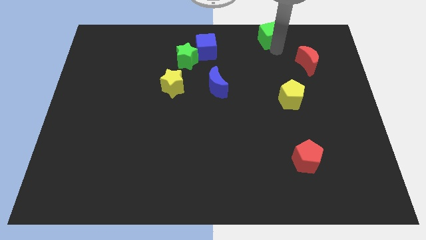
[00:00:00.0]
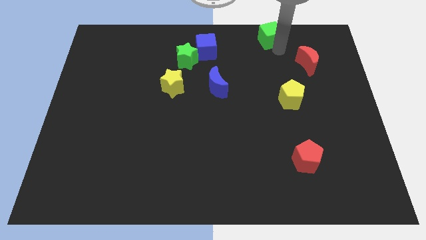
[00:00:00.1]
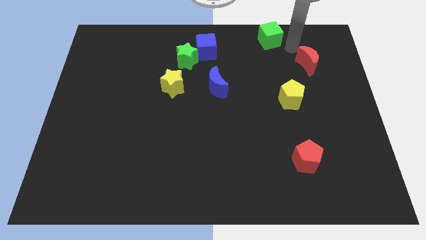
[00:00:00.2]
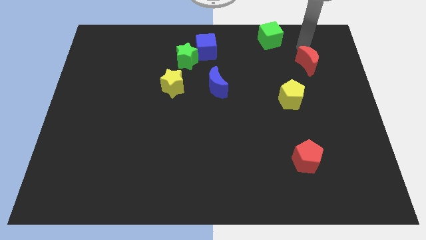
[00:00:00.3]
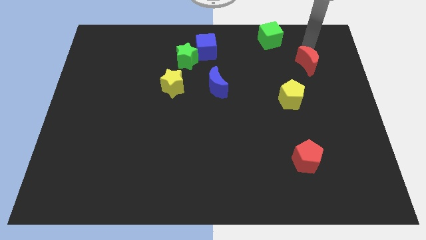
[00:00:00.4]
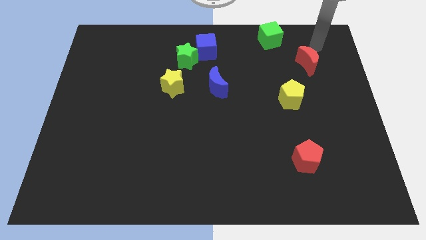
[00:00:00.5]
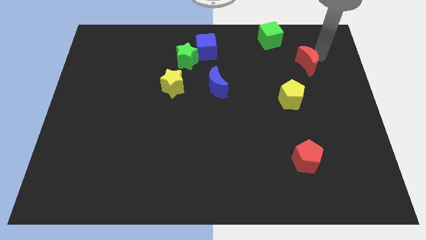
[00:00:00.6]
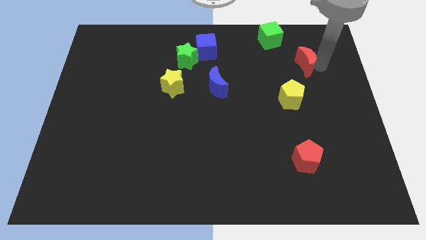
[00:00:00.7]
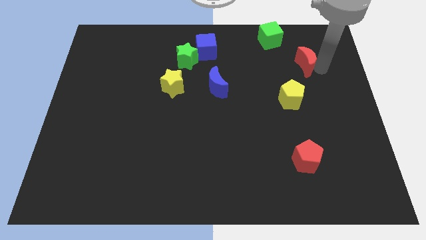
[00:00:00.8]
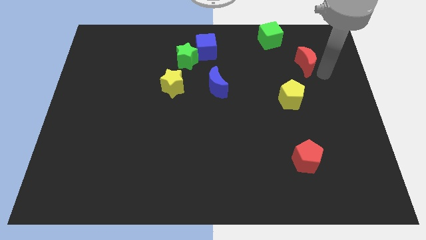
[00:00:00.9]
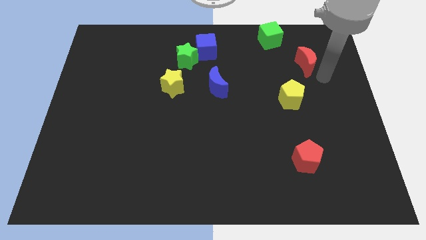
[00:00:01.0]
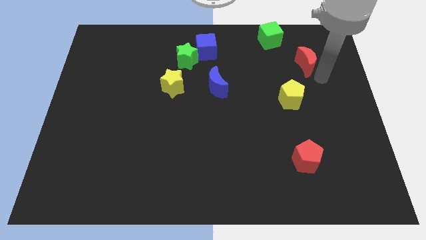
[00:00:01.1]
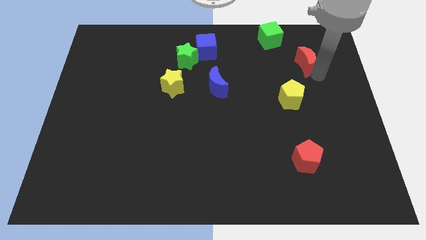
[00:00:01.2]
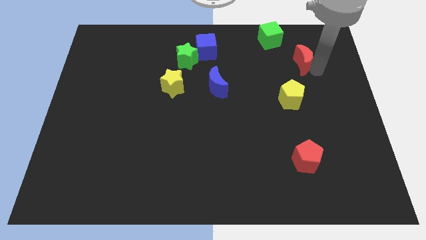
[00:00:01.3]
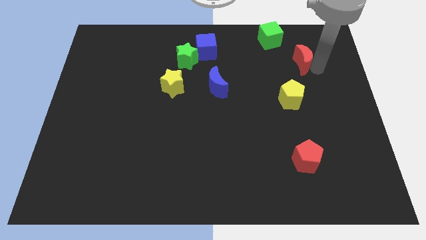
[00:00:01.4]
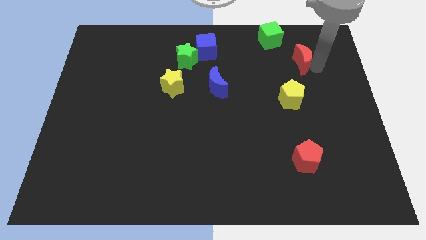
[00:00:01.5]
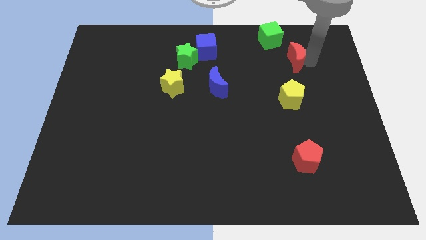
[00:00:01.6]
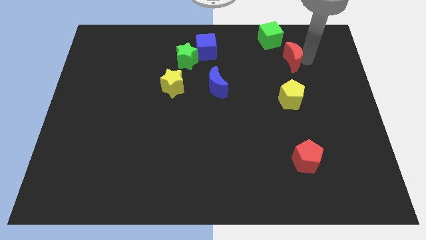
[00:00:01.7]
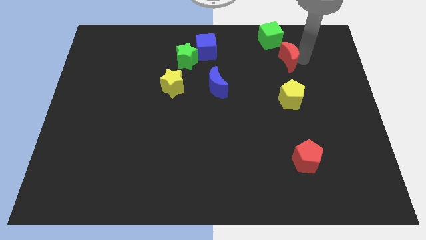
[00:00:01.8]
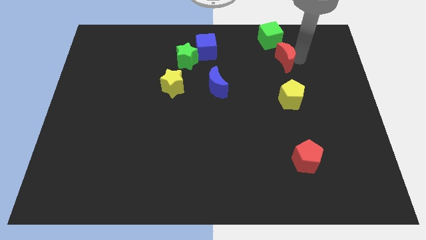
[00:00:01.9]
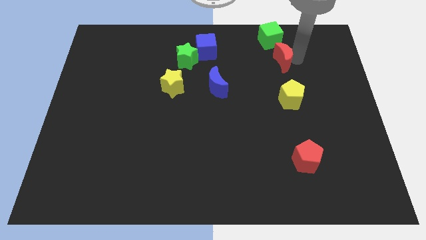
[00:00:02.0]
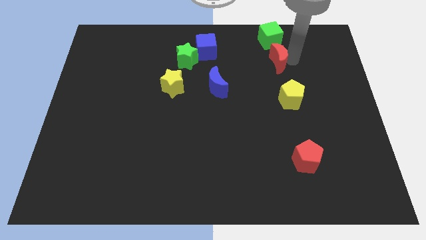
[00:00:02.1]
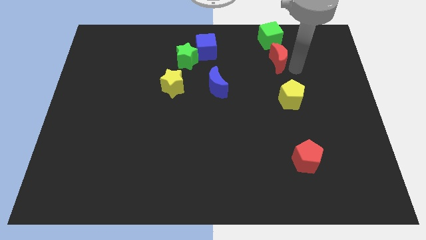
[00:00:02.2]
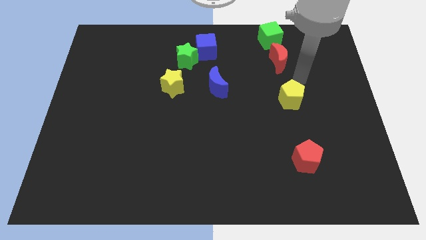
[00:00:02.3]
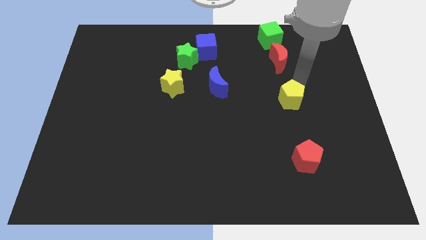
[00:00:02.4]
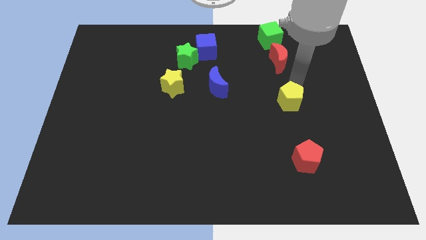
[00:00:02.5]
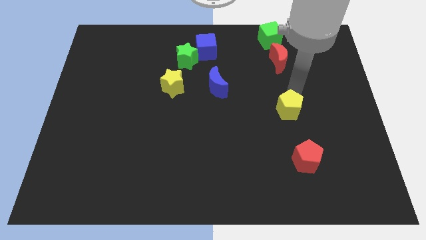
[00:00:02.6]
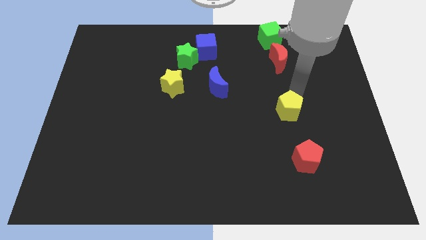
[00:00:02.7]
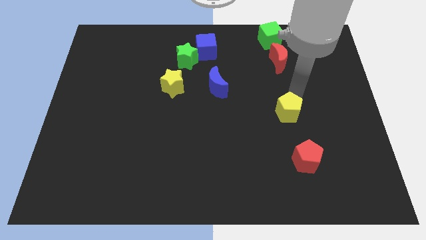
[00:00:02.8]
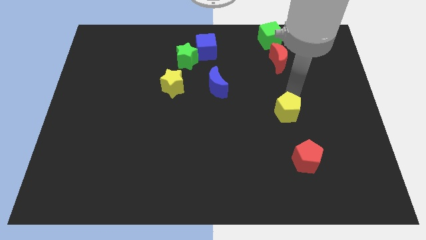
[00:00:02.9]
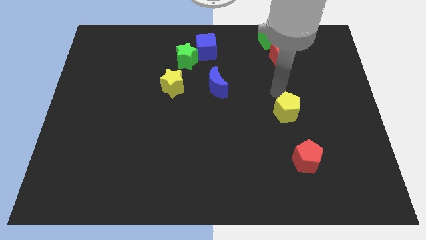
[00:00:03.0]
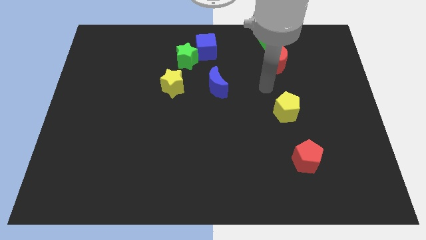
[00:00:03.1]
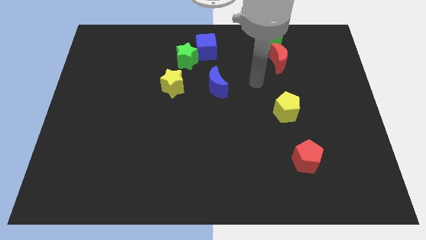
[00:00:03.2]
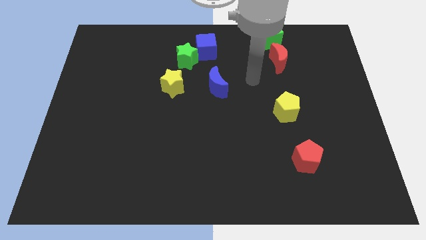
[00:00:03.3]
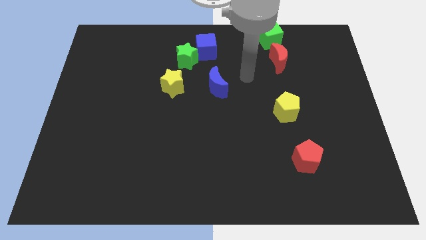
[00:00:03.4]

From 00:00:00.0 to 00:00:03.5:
slightly touch down the yellow pentagon

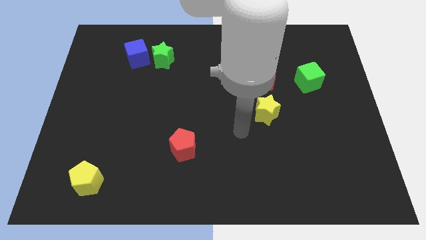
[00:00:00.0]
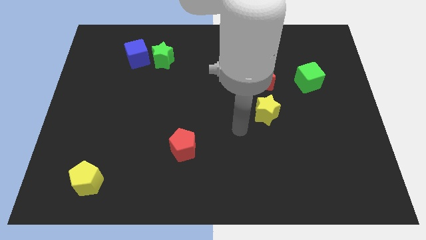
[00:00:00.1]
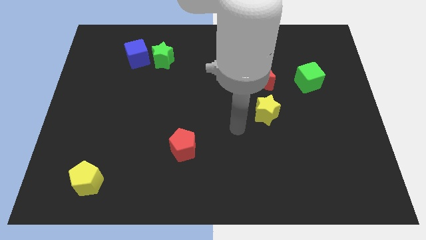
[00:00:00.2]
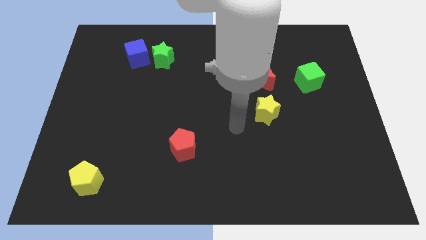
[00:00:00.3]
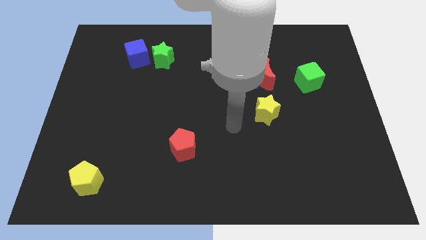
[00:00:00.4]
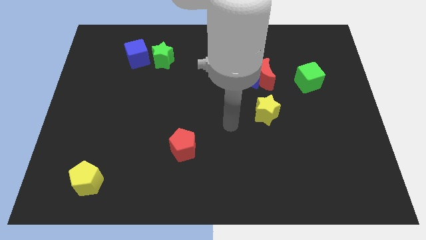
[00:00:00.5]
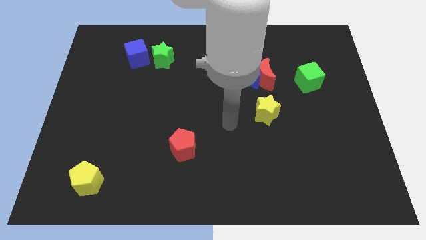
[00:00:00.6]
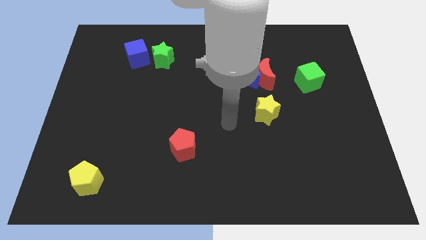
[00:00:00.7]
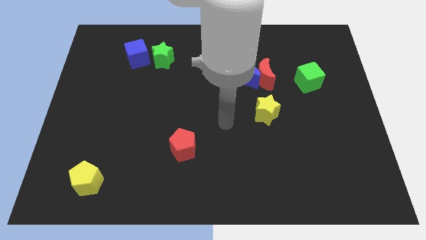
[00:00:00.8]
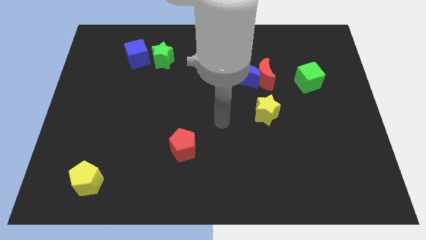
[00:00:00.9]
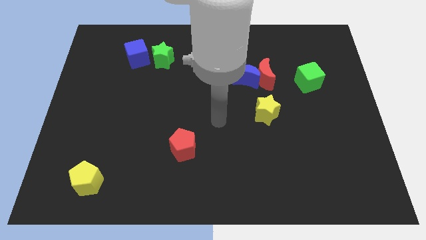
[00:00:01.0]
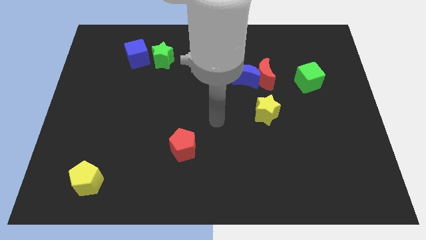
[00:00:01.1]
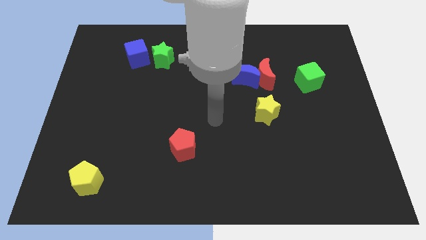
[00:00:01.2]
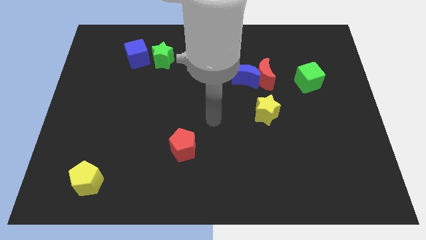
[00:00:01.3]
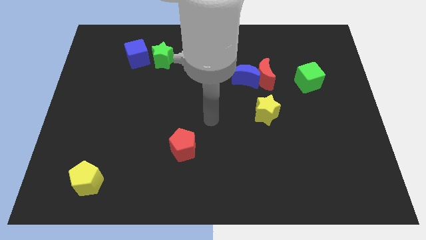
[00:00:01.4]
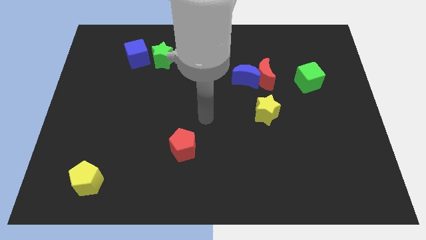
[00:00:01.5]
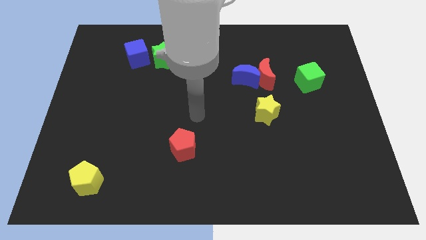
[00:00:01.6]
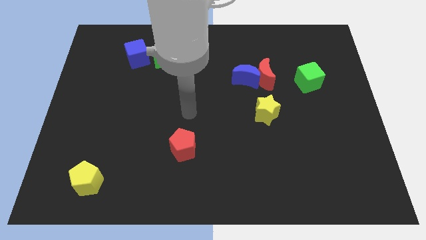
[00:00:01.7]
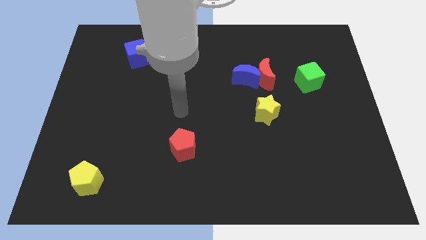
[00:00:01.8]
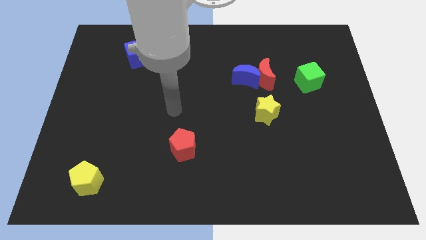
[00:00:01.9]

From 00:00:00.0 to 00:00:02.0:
point your arm at the top of the red pentagon

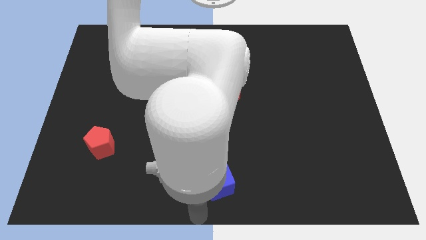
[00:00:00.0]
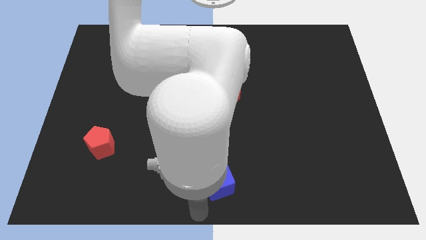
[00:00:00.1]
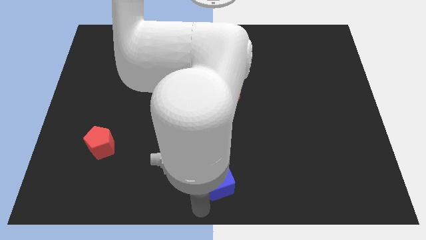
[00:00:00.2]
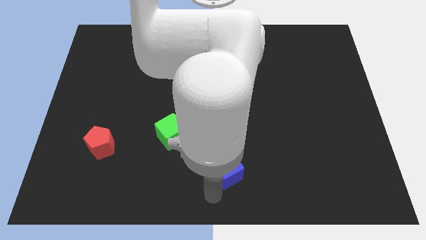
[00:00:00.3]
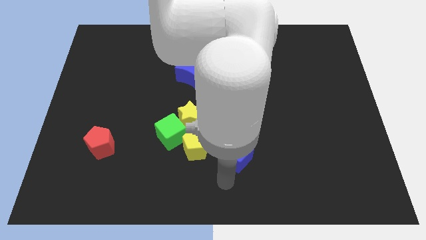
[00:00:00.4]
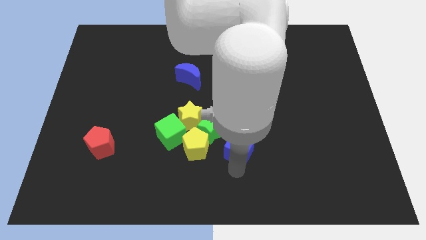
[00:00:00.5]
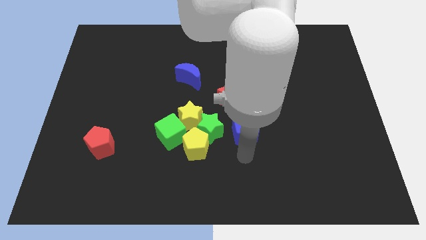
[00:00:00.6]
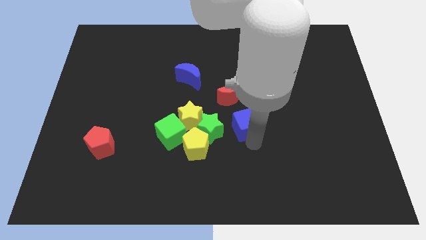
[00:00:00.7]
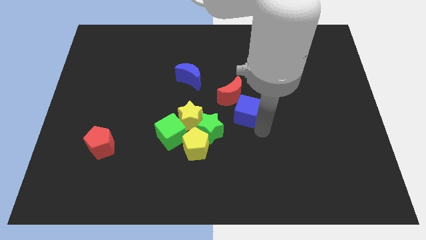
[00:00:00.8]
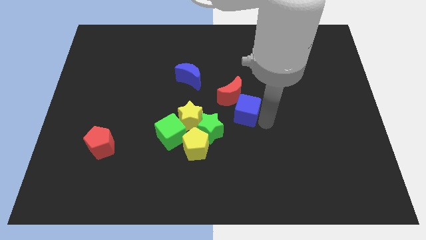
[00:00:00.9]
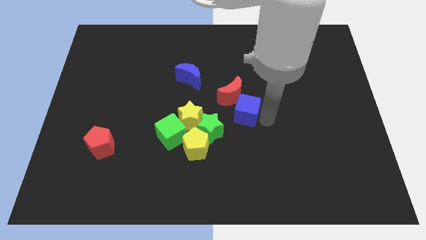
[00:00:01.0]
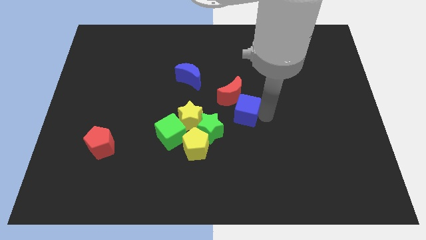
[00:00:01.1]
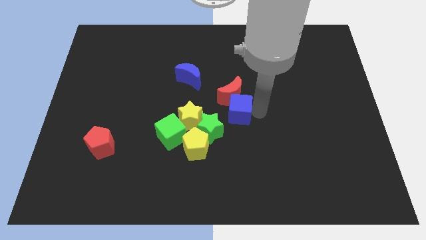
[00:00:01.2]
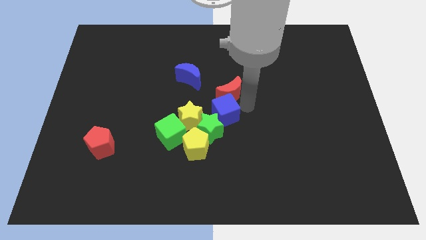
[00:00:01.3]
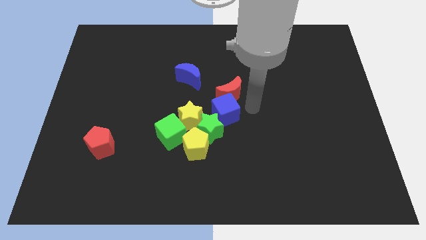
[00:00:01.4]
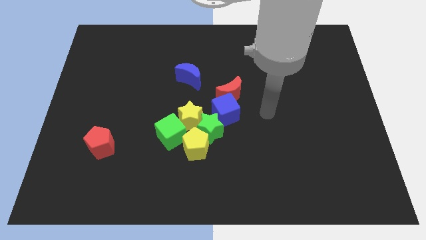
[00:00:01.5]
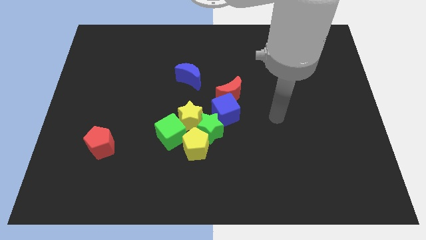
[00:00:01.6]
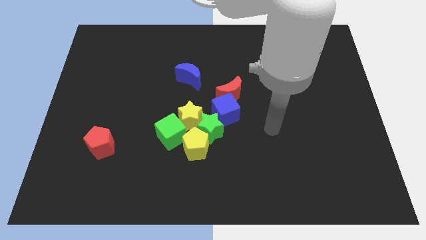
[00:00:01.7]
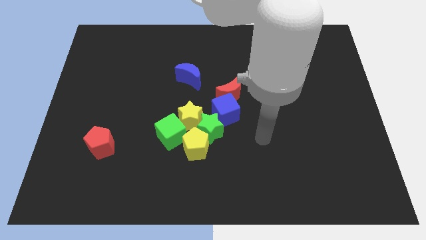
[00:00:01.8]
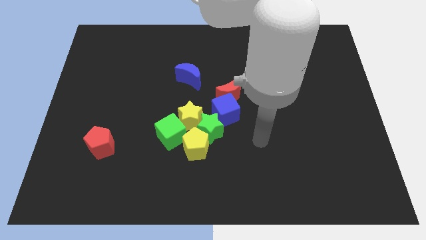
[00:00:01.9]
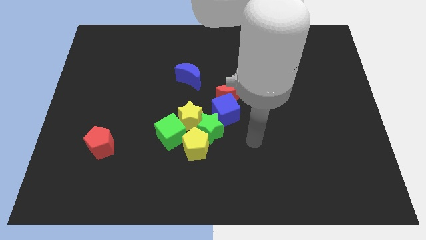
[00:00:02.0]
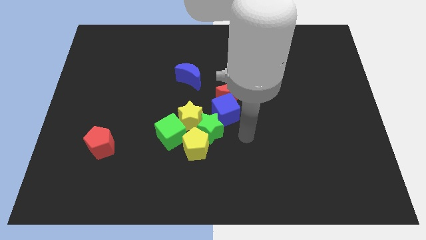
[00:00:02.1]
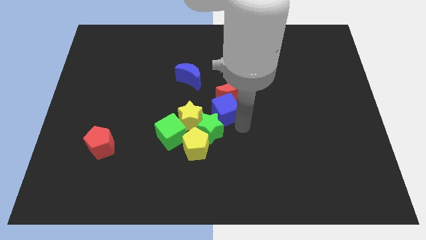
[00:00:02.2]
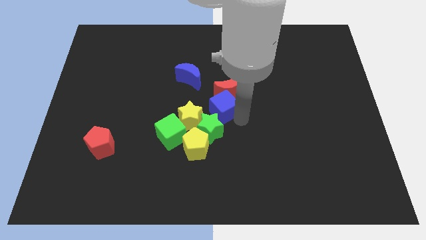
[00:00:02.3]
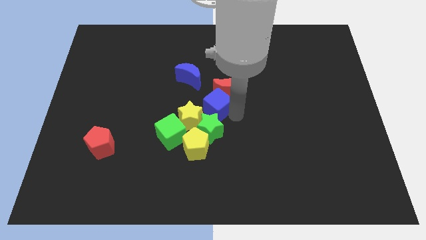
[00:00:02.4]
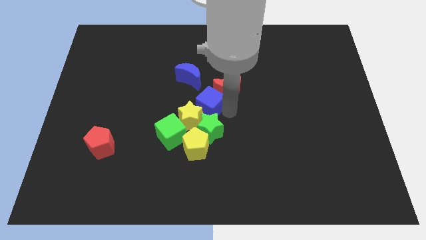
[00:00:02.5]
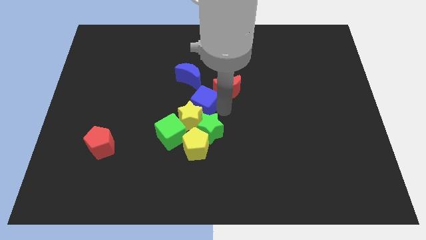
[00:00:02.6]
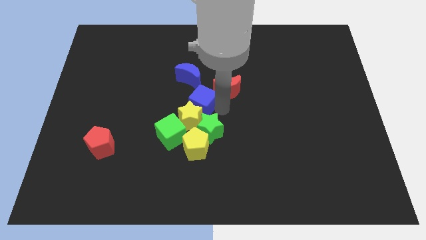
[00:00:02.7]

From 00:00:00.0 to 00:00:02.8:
put the blue cube in between the yellow star and red moon

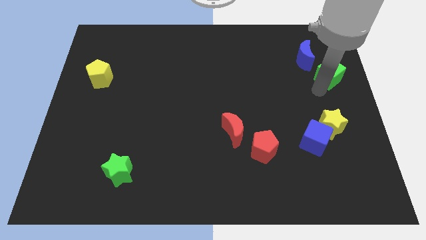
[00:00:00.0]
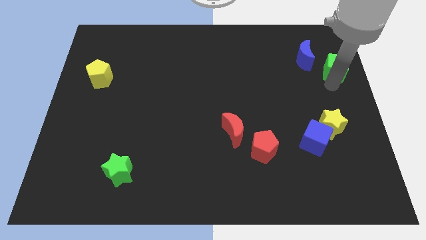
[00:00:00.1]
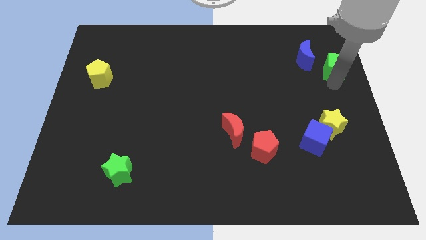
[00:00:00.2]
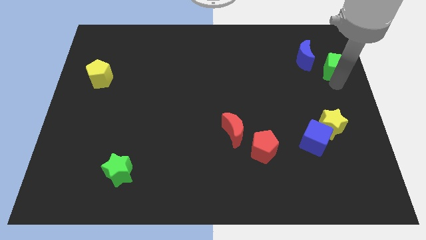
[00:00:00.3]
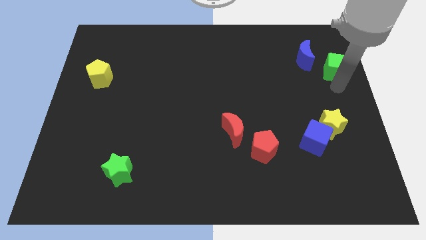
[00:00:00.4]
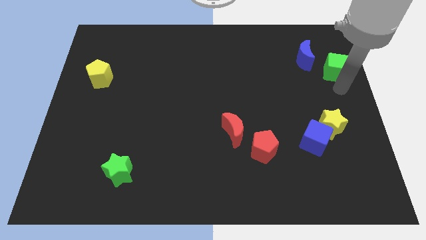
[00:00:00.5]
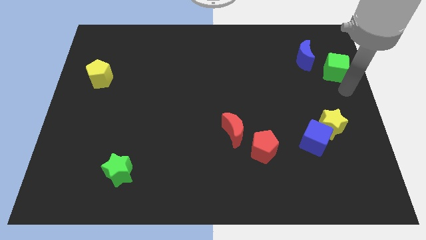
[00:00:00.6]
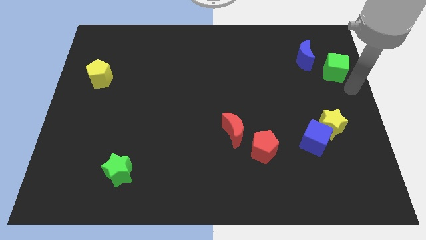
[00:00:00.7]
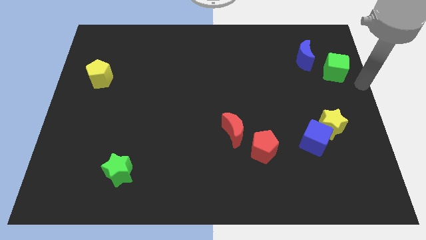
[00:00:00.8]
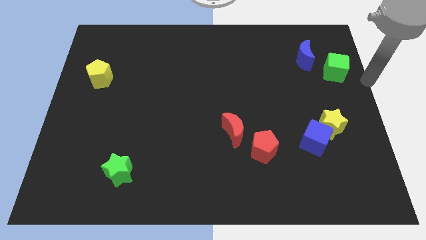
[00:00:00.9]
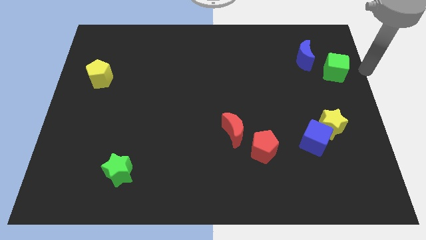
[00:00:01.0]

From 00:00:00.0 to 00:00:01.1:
move arm to the green cube
